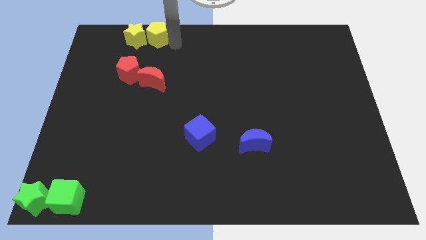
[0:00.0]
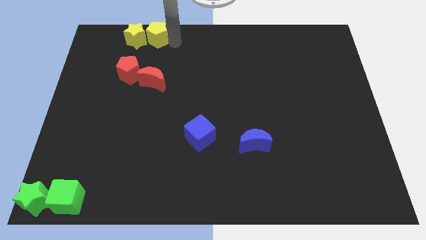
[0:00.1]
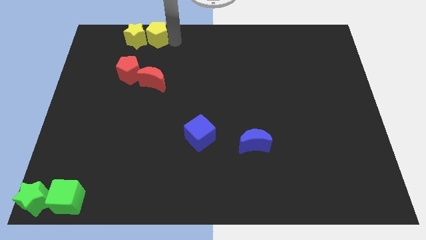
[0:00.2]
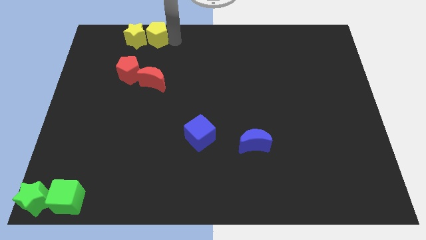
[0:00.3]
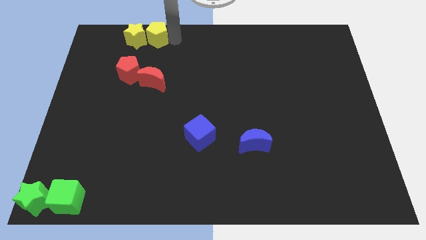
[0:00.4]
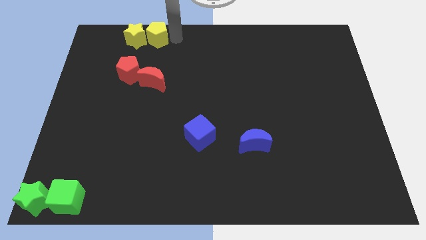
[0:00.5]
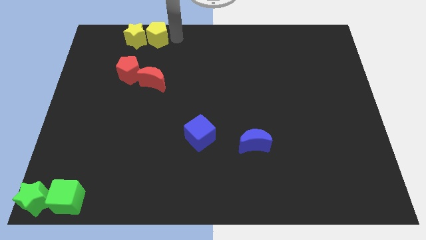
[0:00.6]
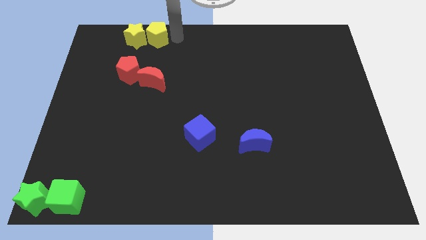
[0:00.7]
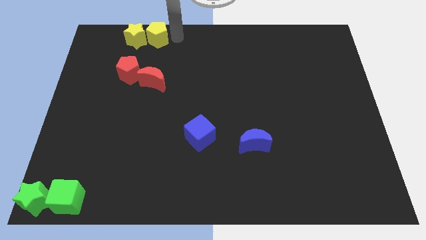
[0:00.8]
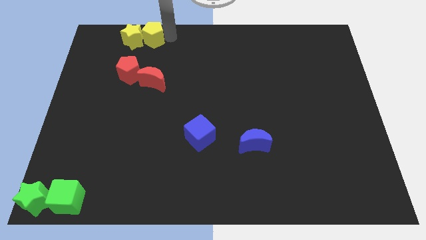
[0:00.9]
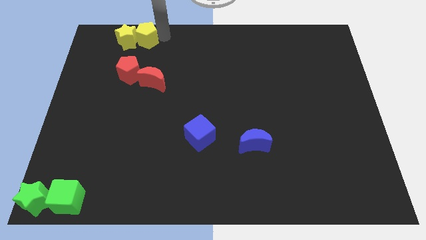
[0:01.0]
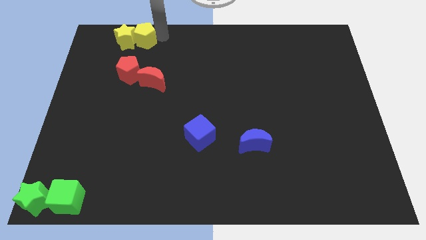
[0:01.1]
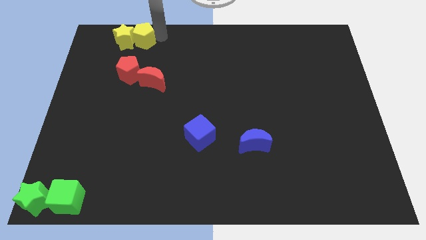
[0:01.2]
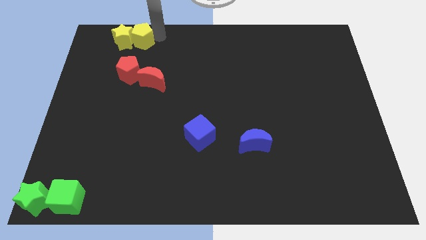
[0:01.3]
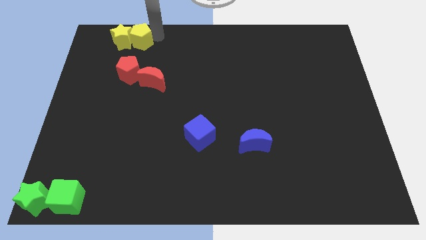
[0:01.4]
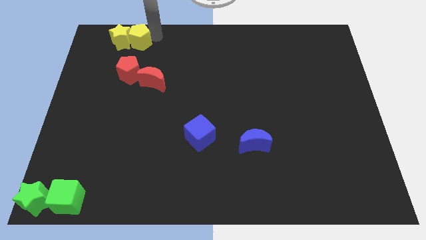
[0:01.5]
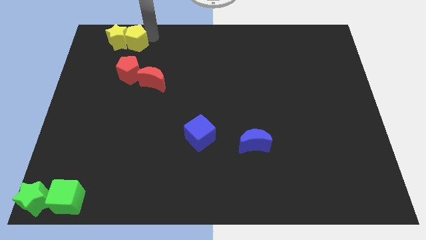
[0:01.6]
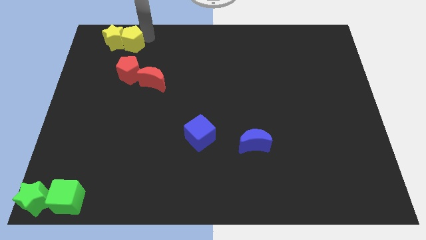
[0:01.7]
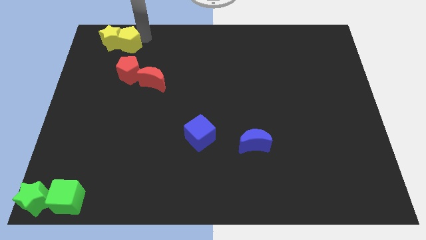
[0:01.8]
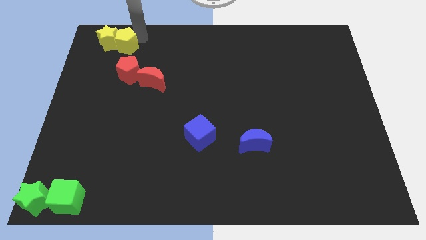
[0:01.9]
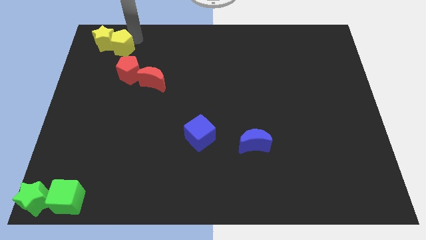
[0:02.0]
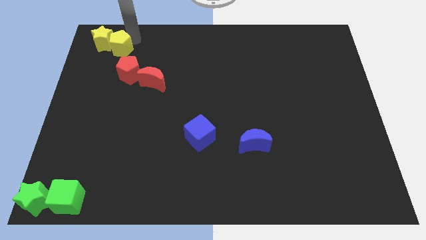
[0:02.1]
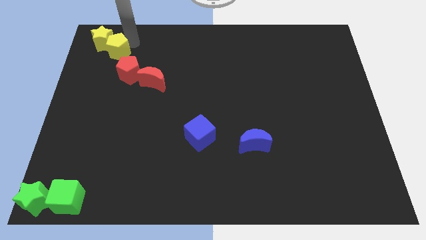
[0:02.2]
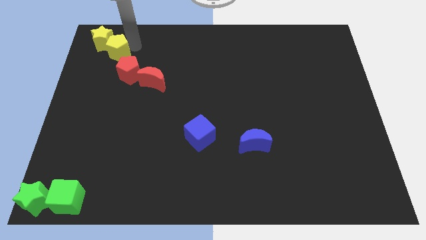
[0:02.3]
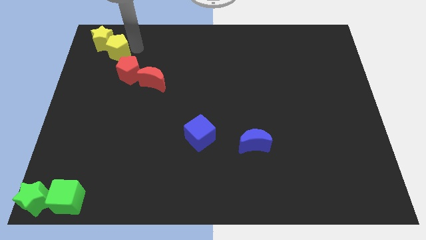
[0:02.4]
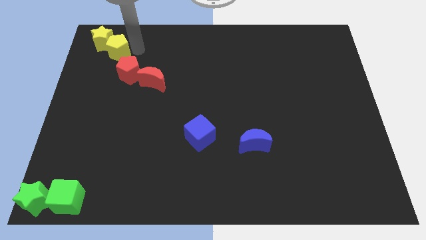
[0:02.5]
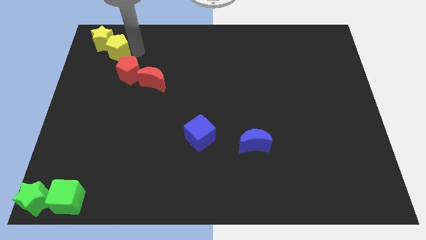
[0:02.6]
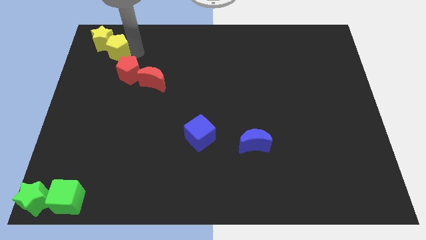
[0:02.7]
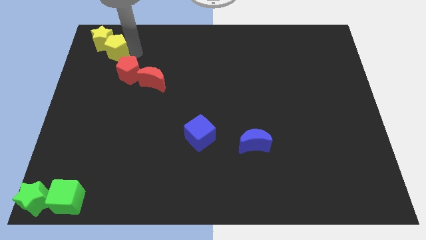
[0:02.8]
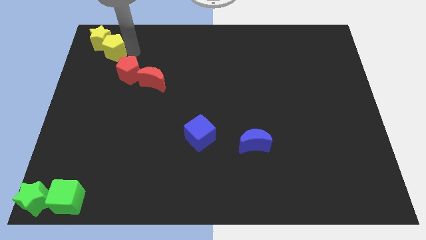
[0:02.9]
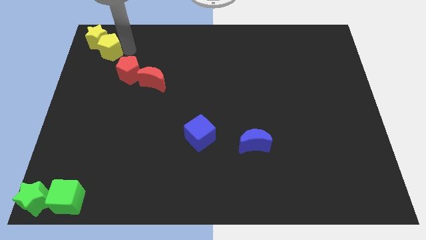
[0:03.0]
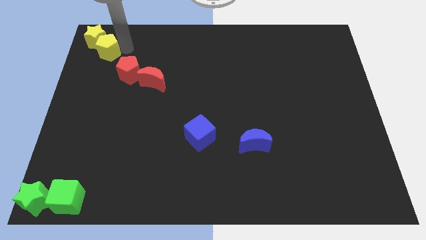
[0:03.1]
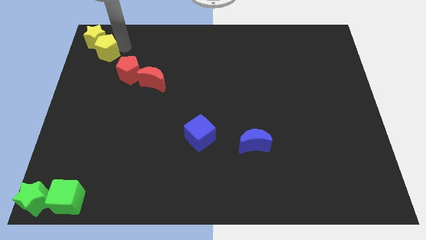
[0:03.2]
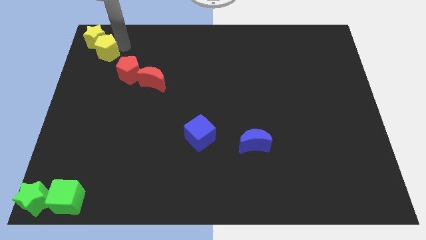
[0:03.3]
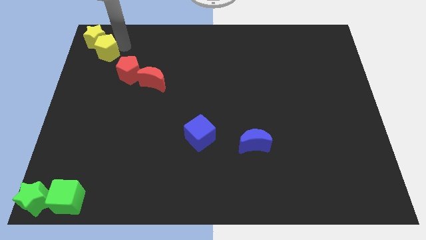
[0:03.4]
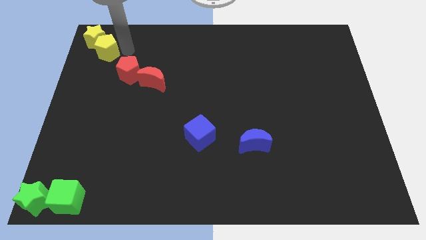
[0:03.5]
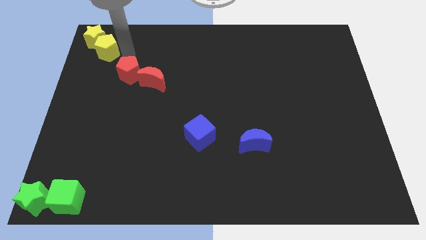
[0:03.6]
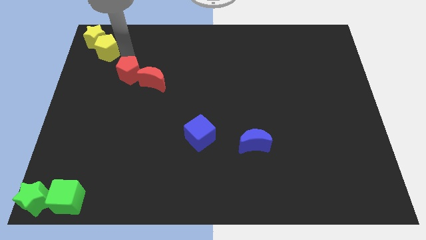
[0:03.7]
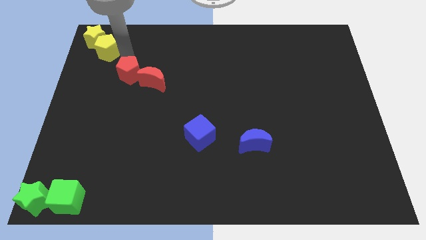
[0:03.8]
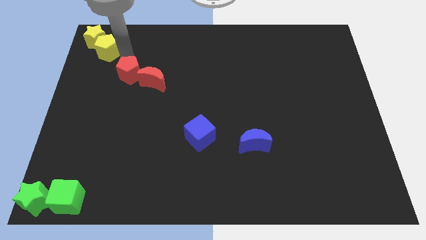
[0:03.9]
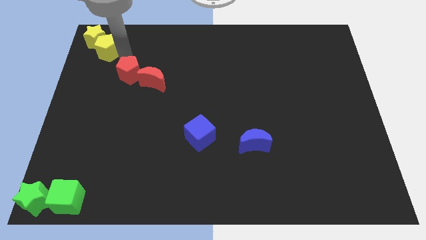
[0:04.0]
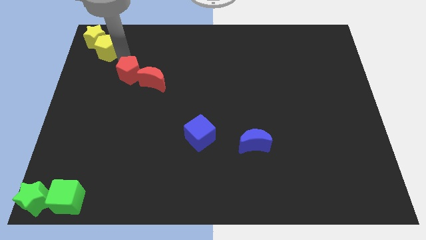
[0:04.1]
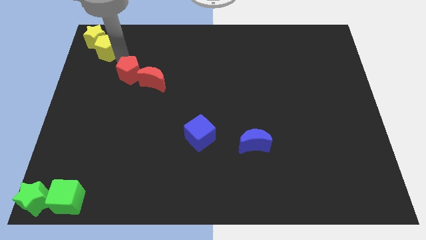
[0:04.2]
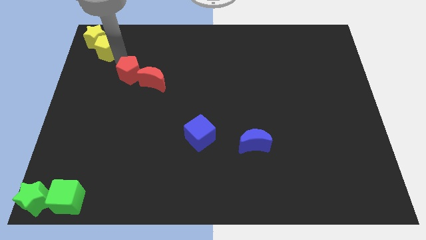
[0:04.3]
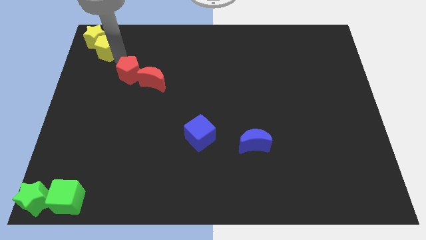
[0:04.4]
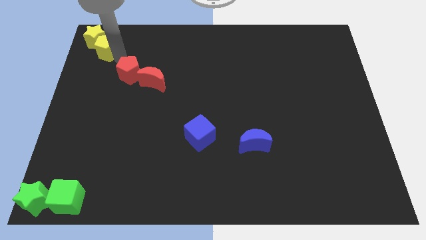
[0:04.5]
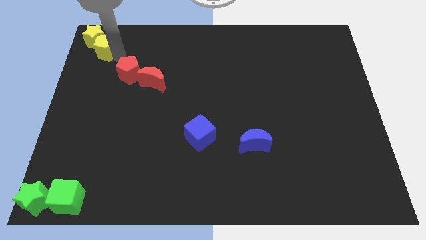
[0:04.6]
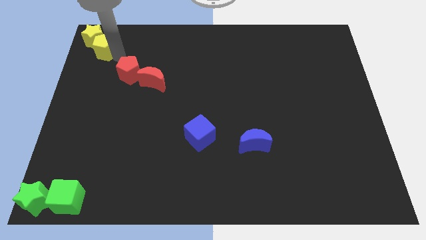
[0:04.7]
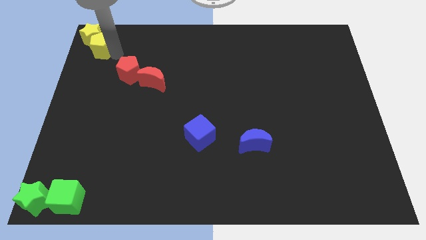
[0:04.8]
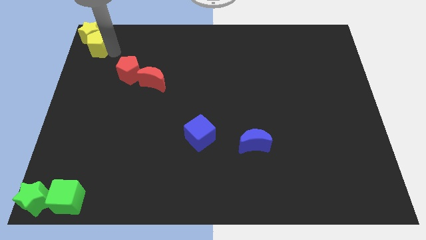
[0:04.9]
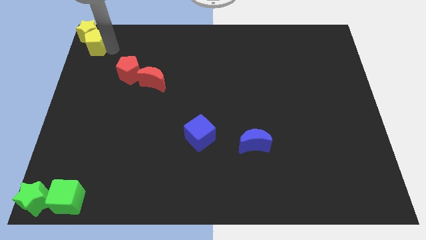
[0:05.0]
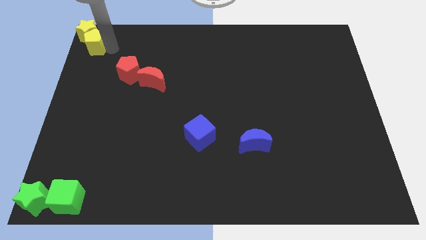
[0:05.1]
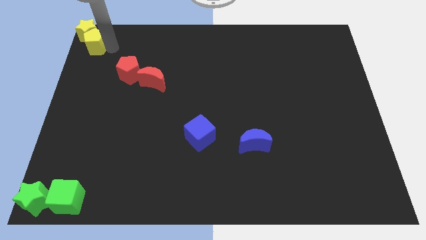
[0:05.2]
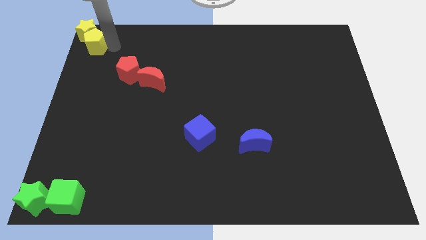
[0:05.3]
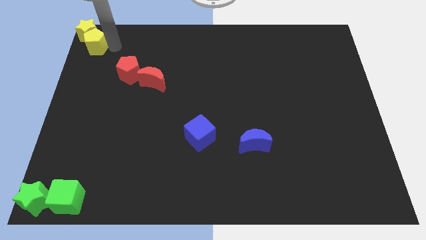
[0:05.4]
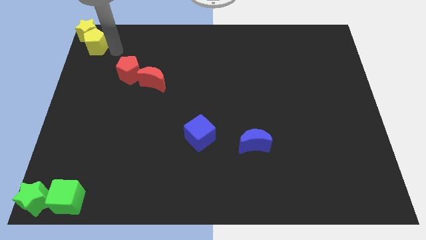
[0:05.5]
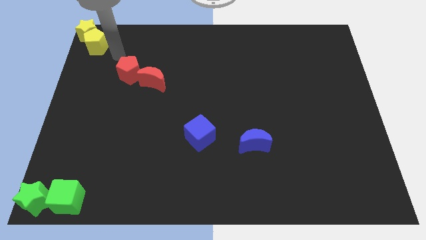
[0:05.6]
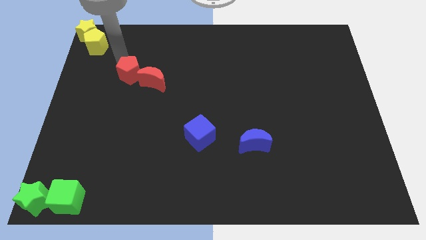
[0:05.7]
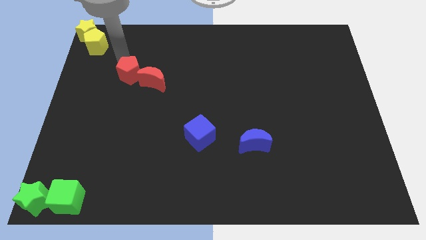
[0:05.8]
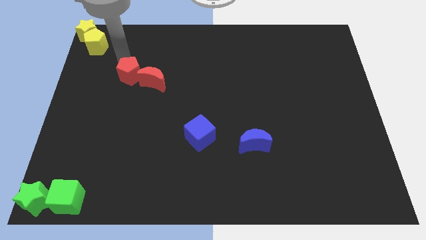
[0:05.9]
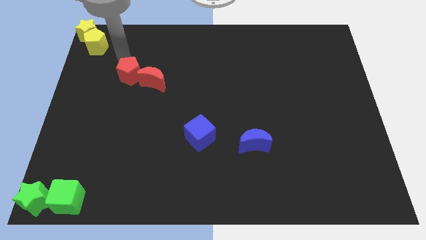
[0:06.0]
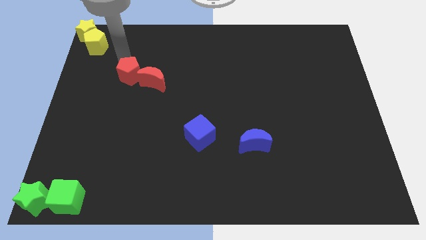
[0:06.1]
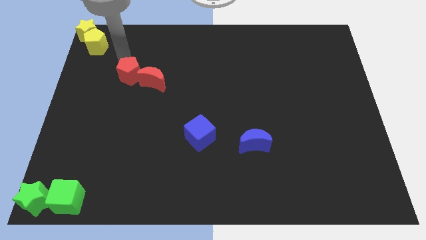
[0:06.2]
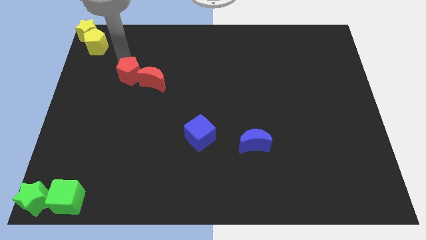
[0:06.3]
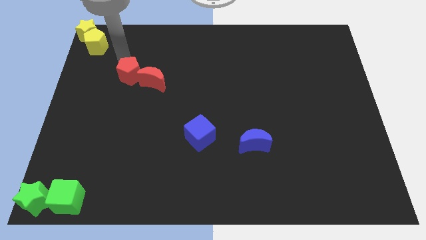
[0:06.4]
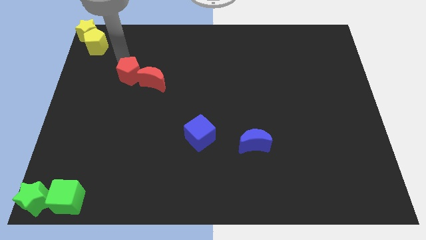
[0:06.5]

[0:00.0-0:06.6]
drag the yellow blocks to the top left corner

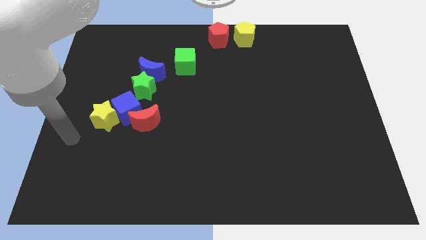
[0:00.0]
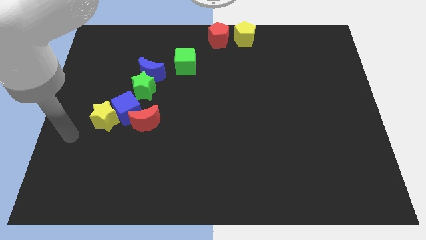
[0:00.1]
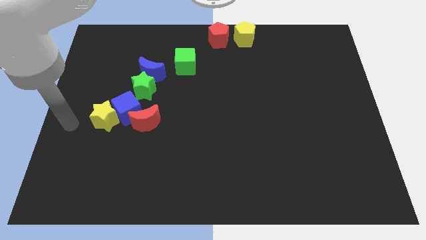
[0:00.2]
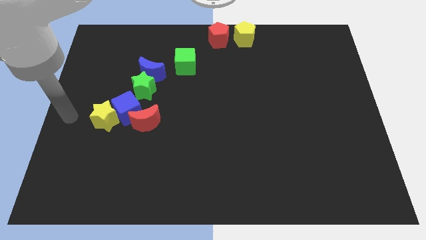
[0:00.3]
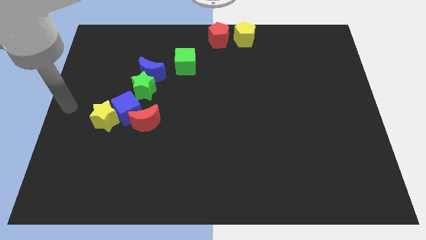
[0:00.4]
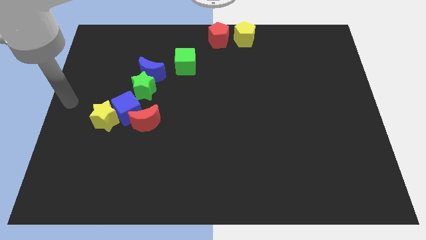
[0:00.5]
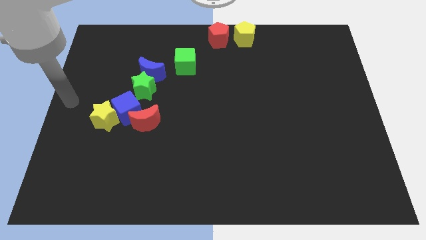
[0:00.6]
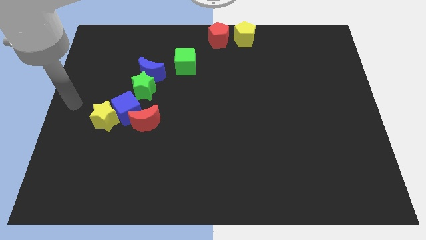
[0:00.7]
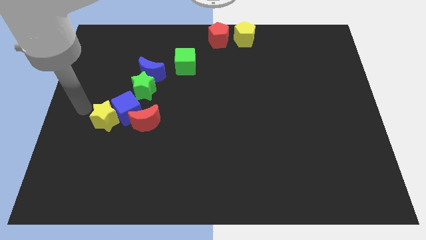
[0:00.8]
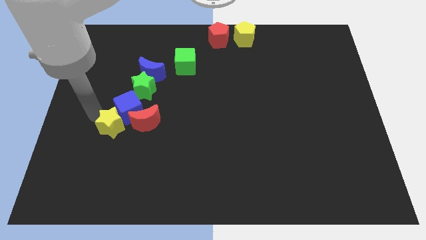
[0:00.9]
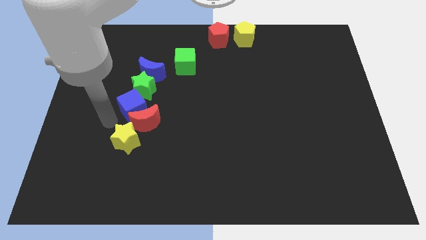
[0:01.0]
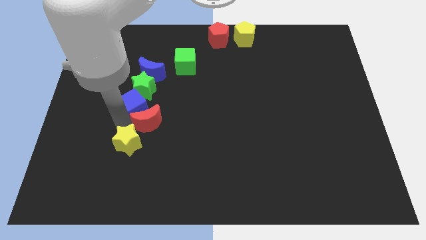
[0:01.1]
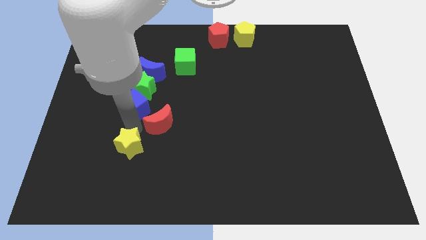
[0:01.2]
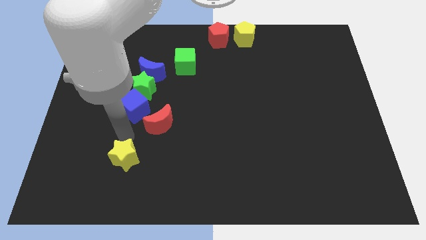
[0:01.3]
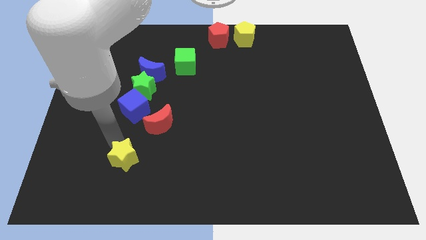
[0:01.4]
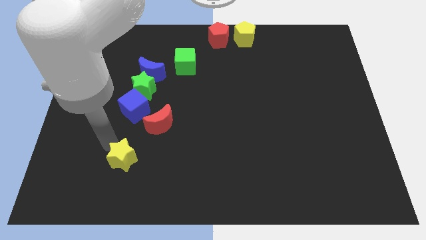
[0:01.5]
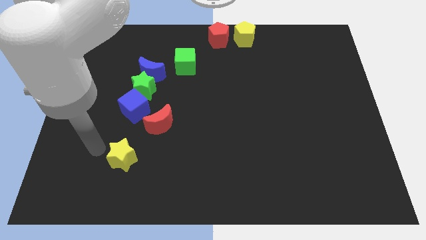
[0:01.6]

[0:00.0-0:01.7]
separate the yellow star from blue cube

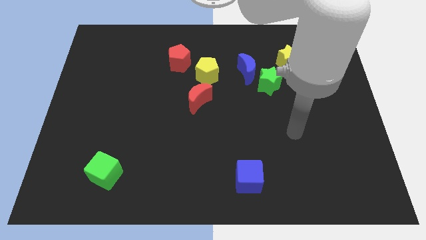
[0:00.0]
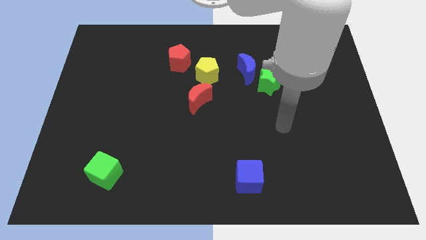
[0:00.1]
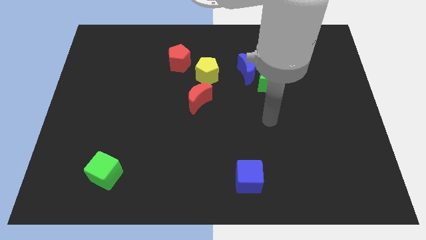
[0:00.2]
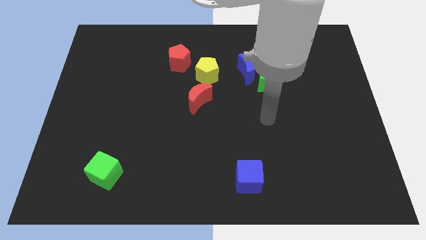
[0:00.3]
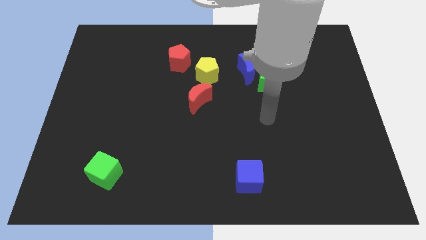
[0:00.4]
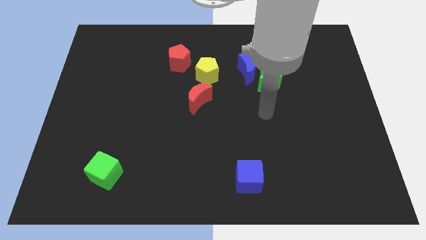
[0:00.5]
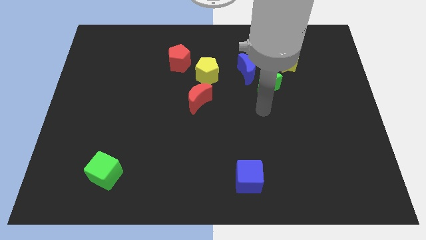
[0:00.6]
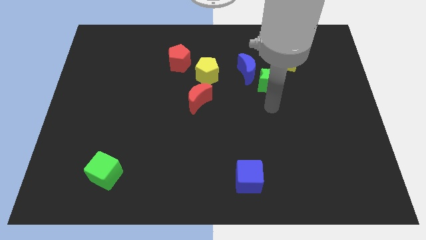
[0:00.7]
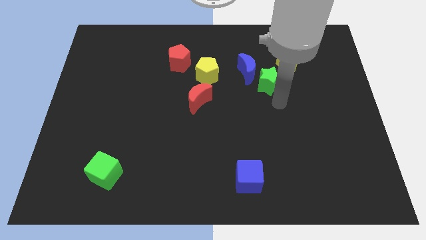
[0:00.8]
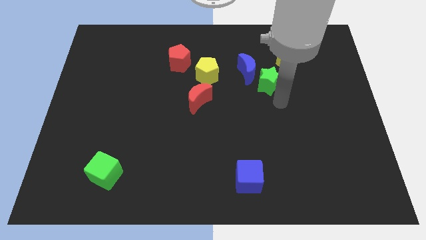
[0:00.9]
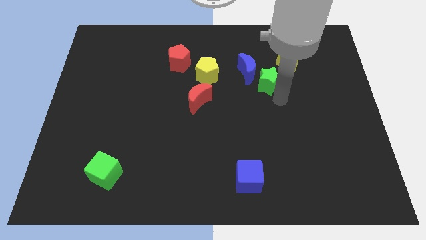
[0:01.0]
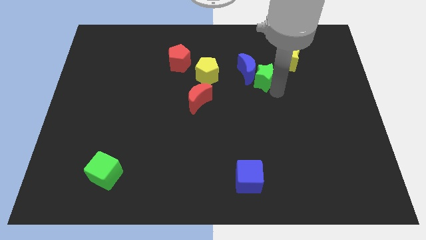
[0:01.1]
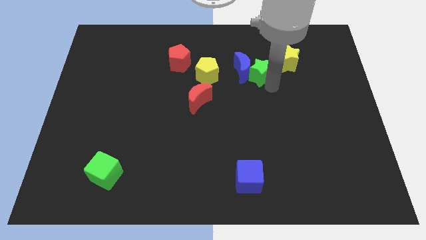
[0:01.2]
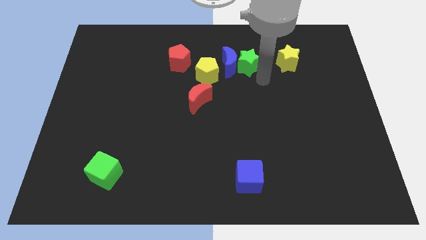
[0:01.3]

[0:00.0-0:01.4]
push the green star into the blue moon
